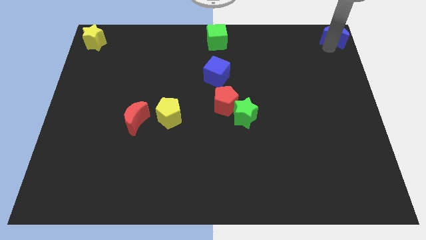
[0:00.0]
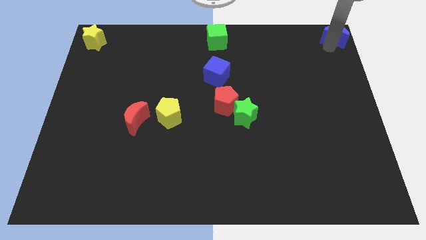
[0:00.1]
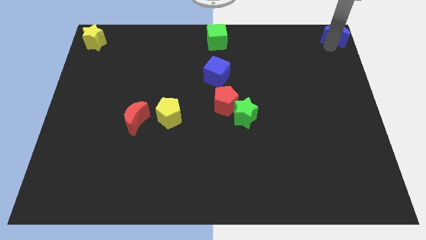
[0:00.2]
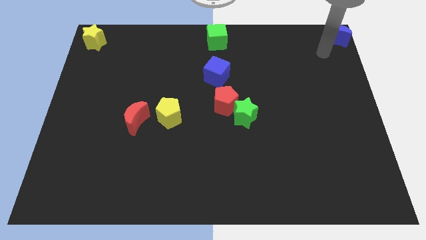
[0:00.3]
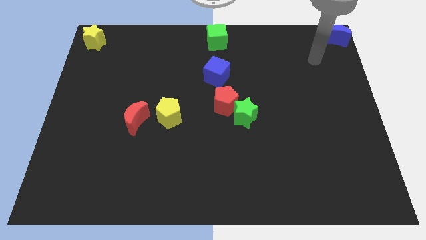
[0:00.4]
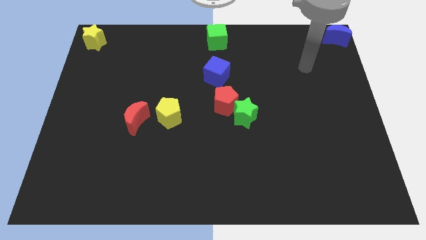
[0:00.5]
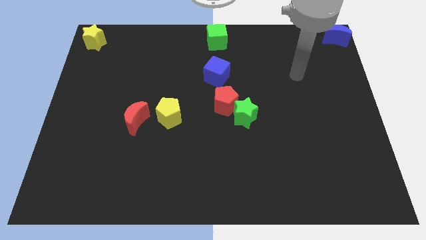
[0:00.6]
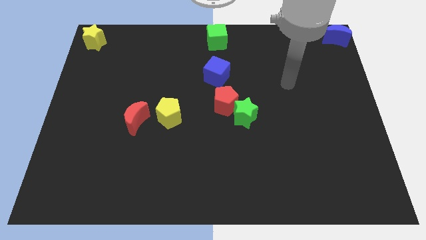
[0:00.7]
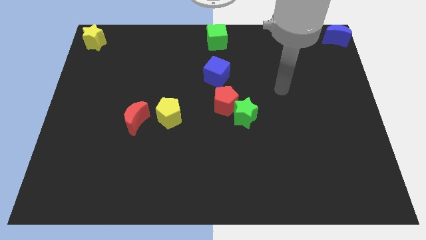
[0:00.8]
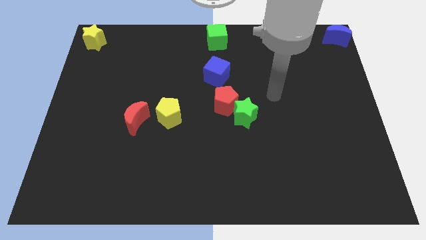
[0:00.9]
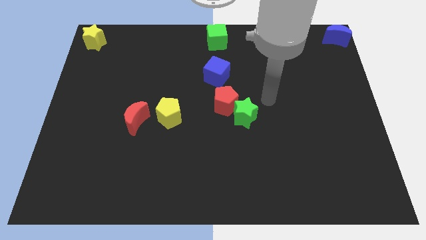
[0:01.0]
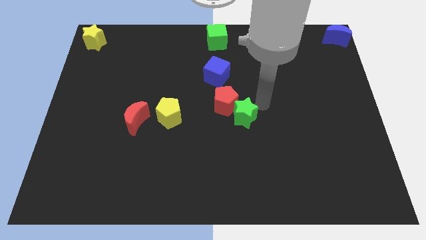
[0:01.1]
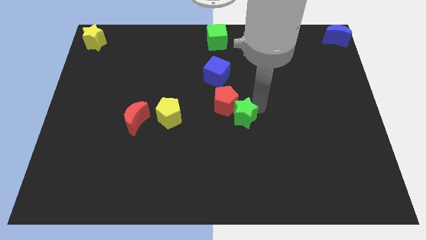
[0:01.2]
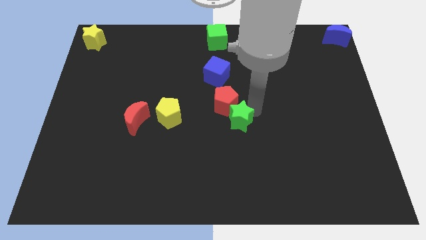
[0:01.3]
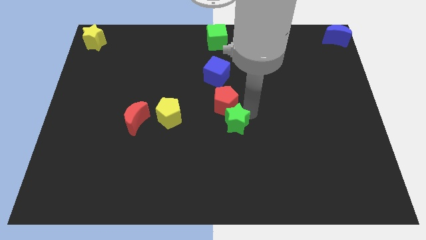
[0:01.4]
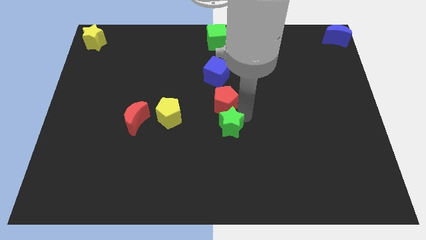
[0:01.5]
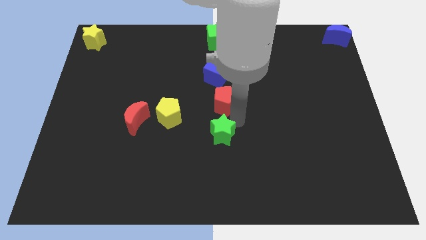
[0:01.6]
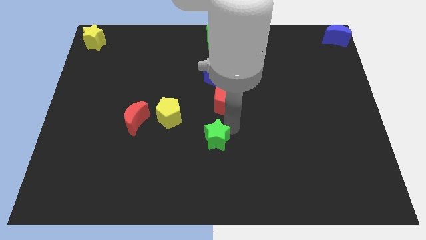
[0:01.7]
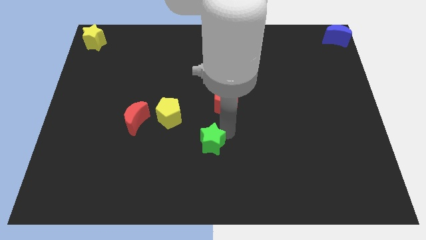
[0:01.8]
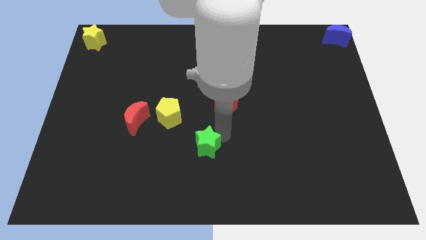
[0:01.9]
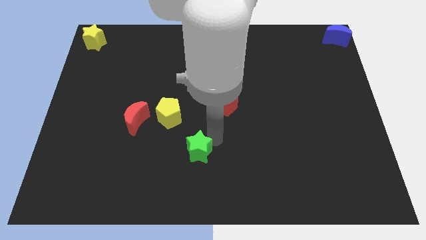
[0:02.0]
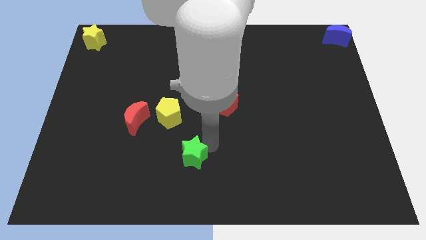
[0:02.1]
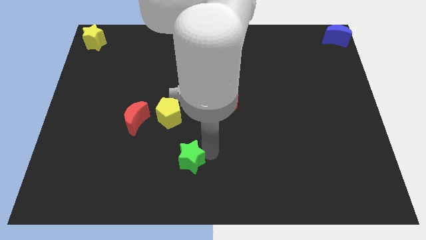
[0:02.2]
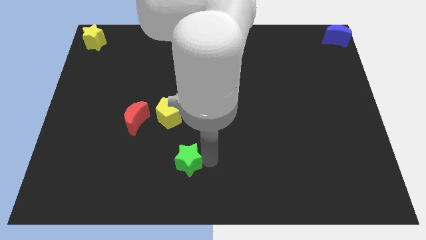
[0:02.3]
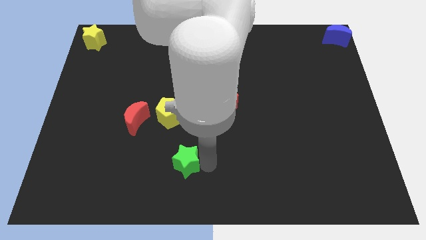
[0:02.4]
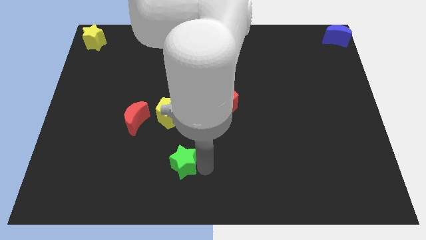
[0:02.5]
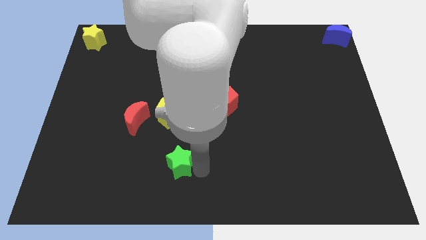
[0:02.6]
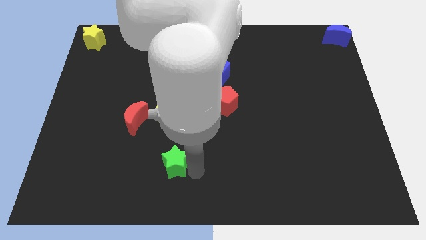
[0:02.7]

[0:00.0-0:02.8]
place the green star at the bottom side of the yellow pentagon

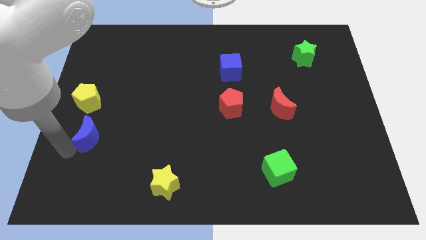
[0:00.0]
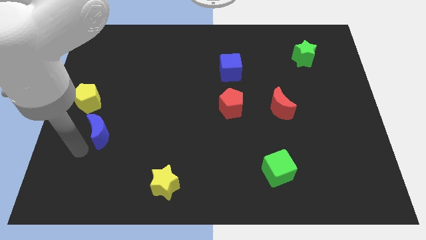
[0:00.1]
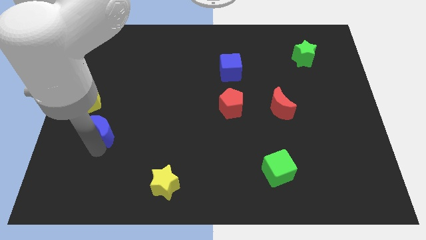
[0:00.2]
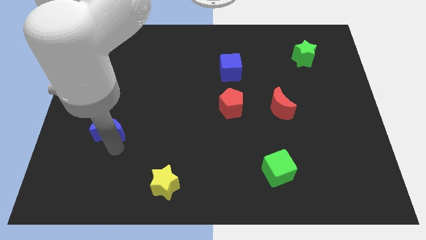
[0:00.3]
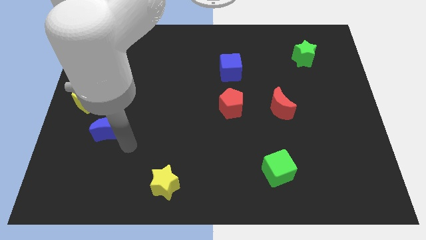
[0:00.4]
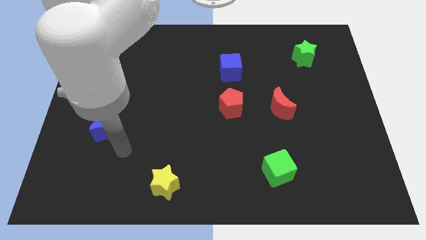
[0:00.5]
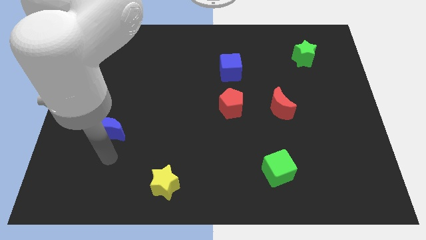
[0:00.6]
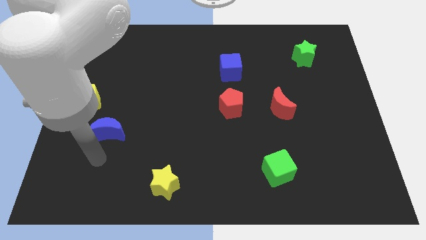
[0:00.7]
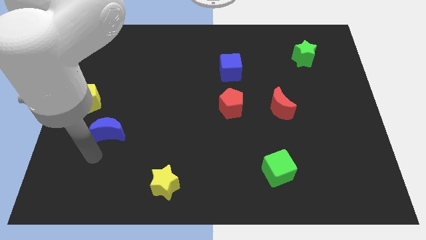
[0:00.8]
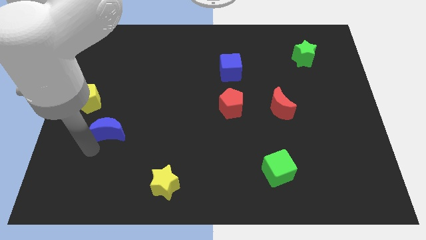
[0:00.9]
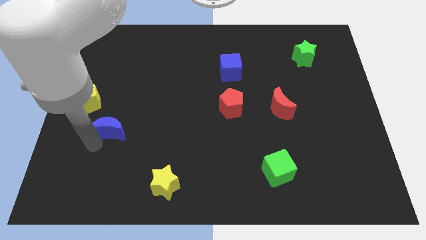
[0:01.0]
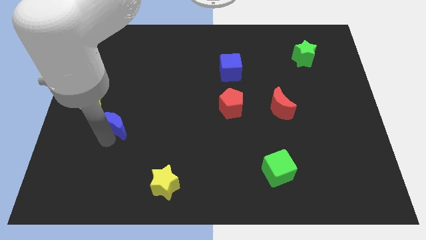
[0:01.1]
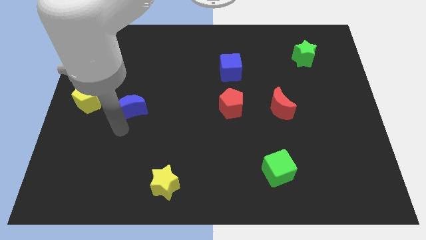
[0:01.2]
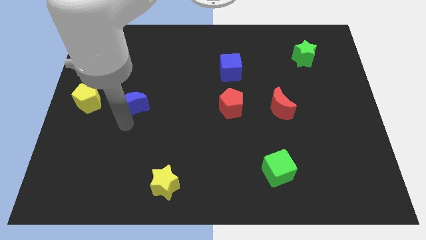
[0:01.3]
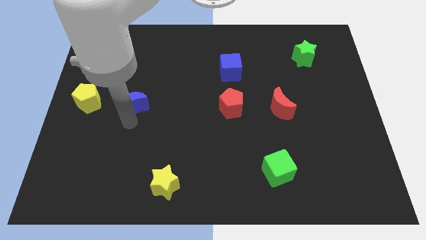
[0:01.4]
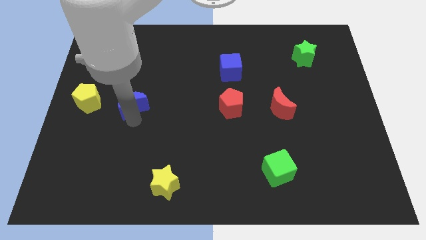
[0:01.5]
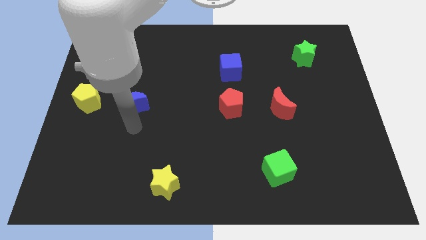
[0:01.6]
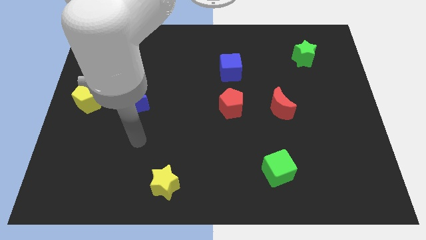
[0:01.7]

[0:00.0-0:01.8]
push the blue moon to the right side of the yellow pentagon

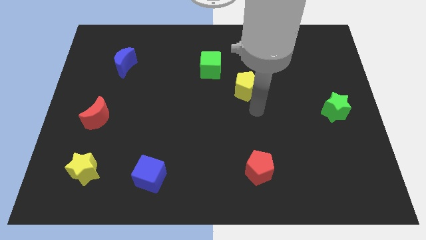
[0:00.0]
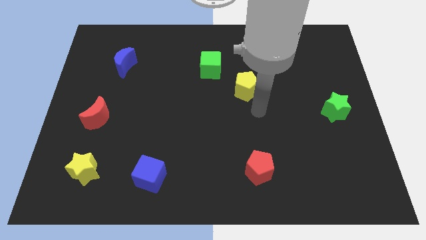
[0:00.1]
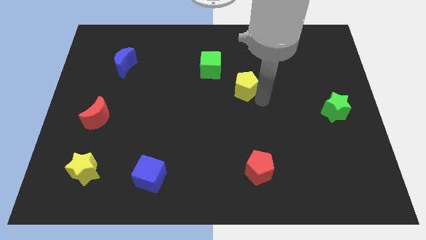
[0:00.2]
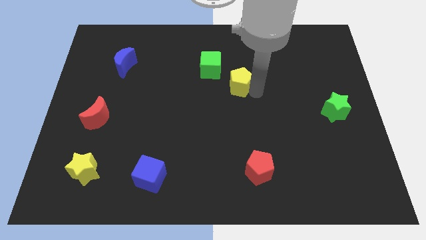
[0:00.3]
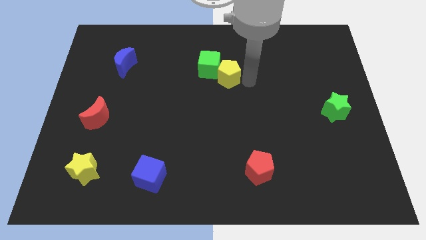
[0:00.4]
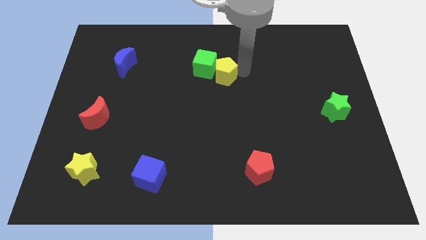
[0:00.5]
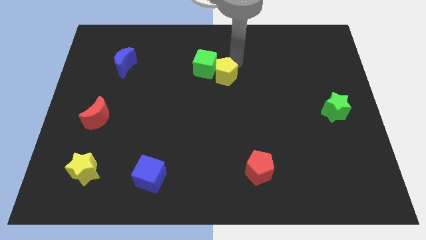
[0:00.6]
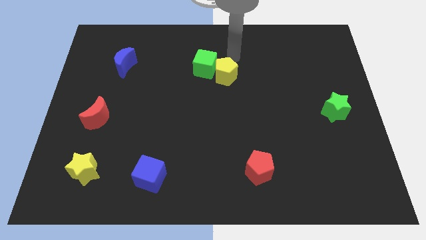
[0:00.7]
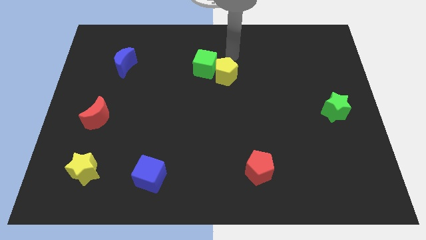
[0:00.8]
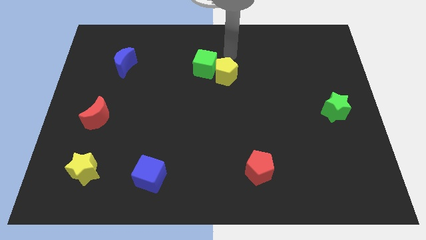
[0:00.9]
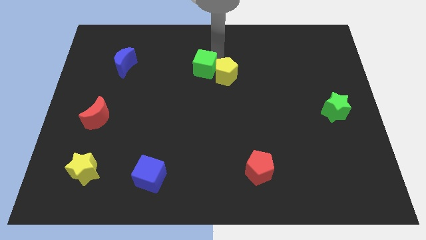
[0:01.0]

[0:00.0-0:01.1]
push the yellow pentagon into the green cube

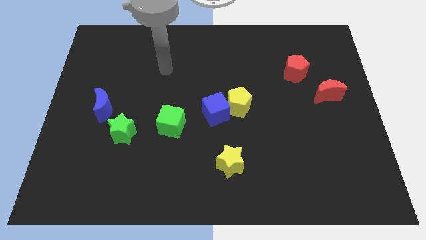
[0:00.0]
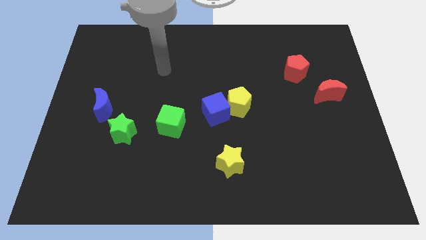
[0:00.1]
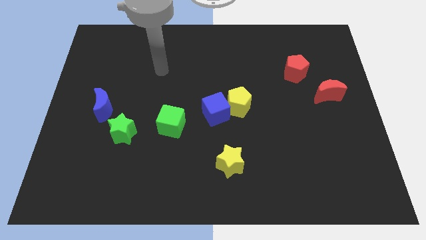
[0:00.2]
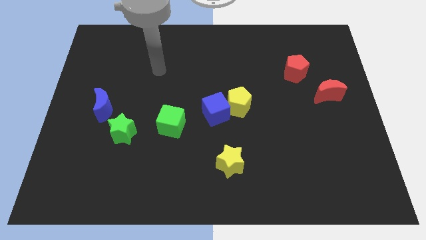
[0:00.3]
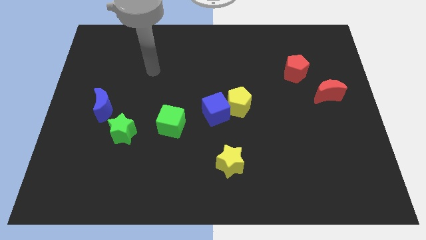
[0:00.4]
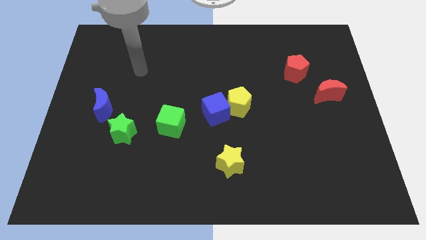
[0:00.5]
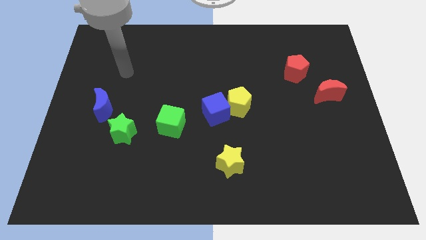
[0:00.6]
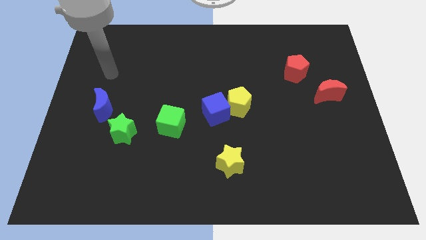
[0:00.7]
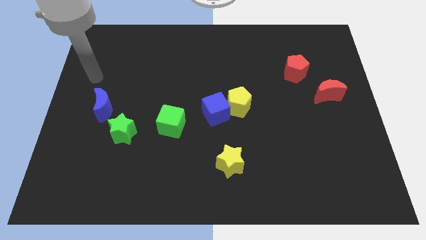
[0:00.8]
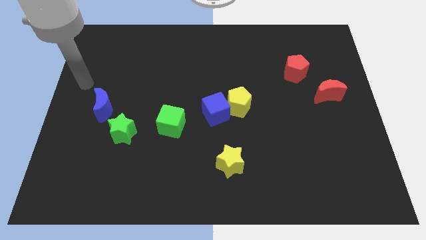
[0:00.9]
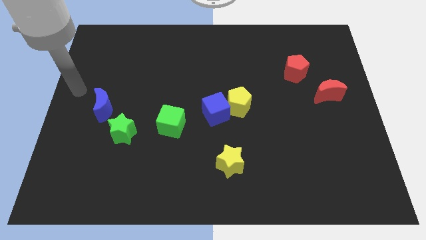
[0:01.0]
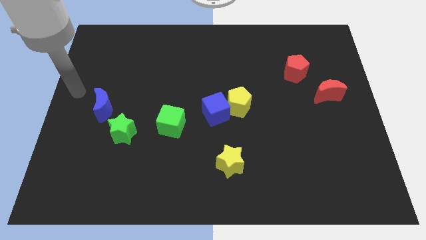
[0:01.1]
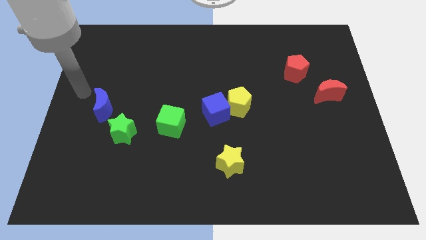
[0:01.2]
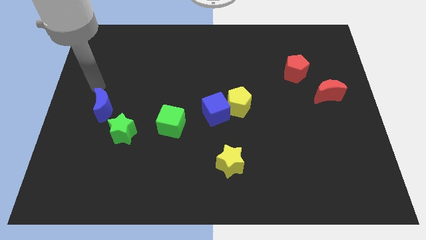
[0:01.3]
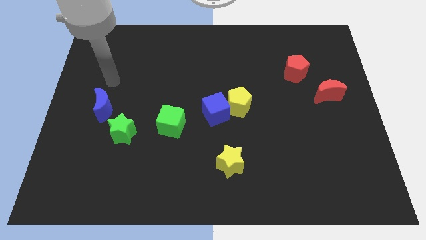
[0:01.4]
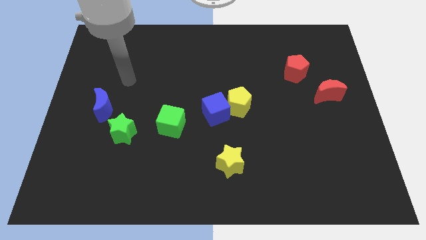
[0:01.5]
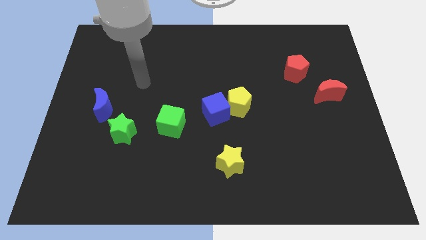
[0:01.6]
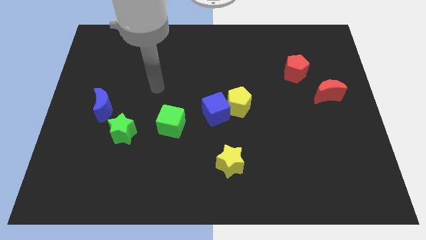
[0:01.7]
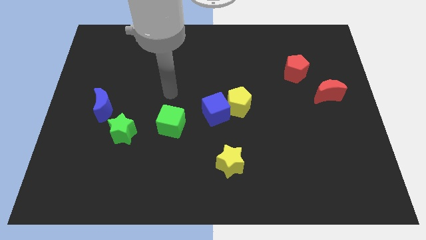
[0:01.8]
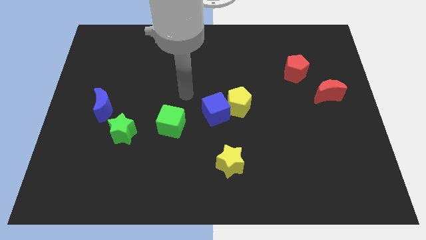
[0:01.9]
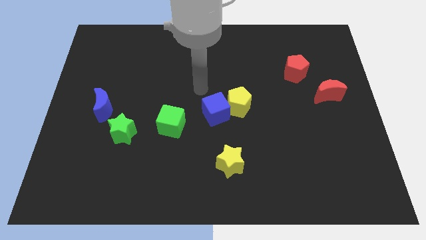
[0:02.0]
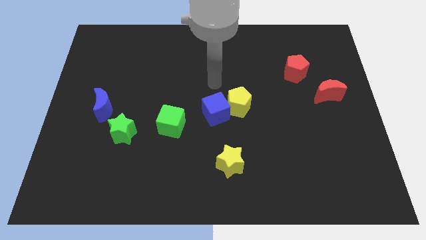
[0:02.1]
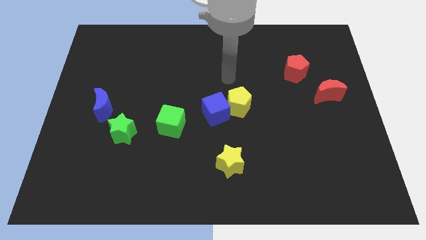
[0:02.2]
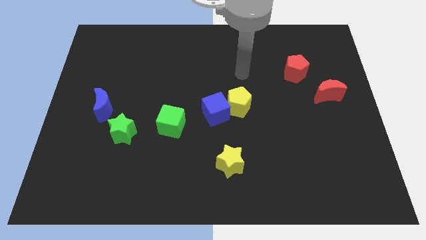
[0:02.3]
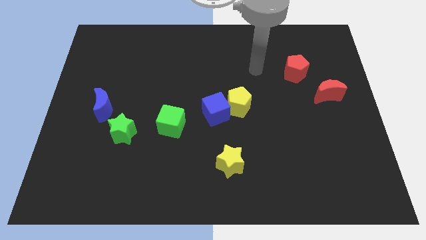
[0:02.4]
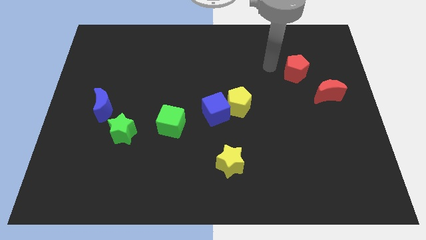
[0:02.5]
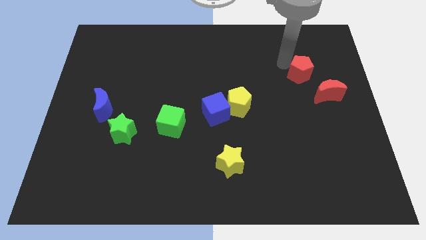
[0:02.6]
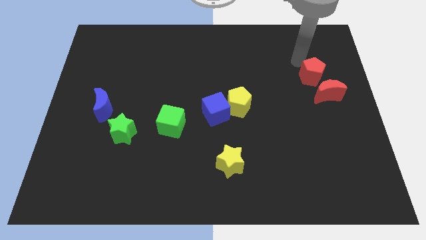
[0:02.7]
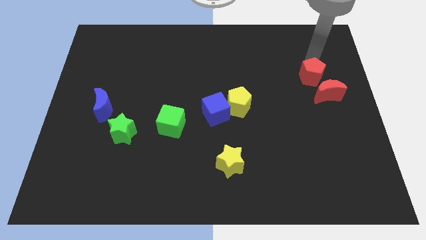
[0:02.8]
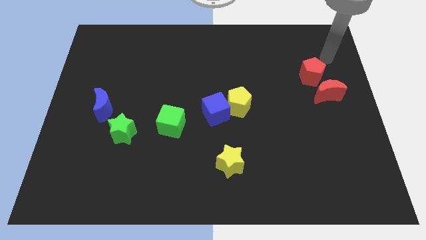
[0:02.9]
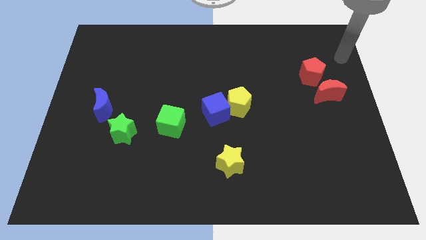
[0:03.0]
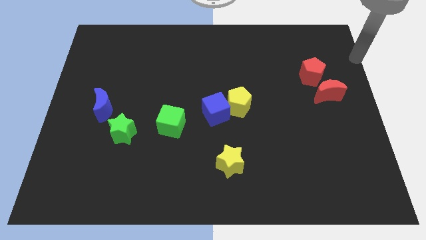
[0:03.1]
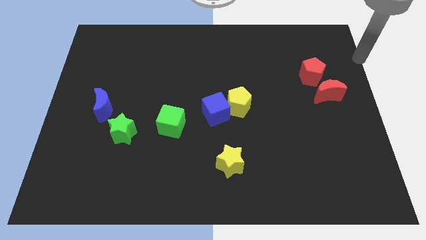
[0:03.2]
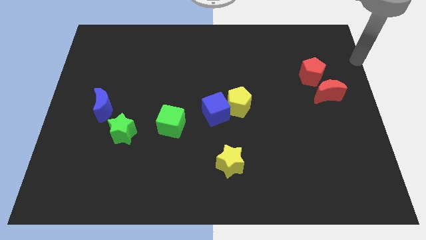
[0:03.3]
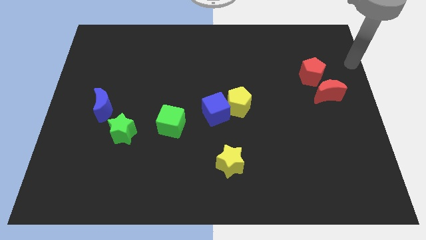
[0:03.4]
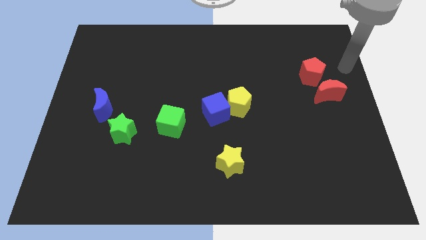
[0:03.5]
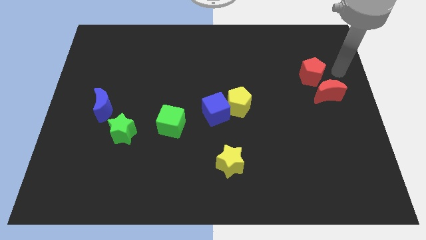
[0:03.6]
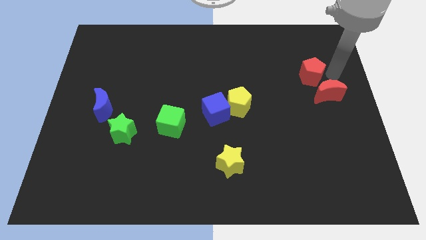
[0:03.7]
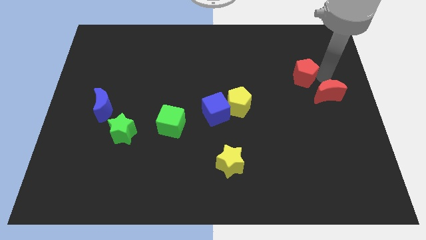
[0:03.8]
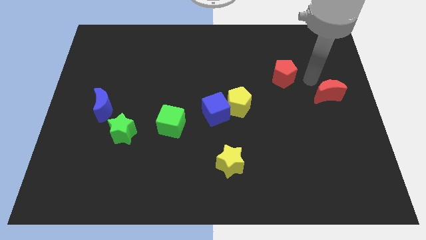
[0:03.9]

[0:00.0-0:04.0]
move the red moon diagonally on the top left side of the red crescent
